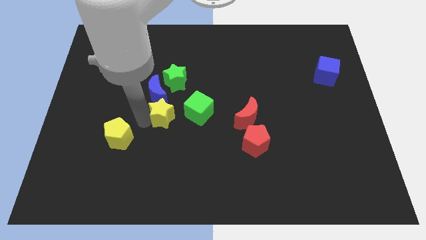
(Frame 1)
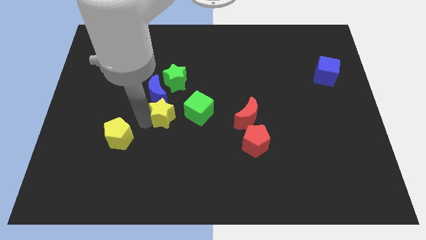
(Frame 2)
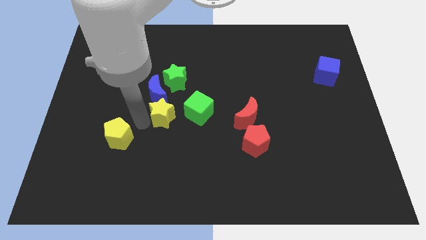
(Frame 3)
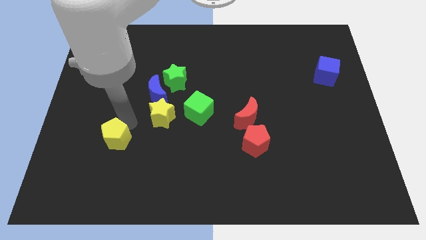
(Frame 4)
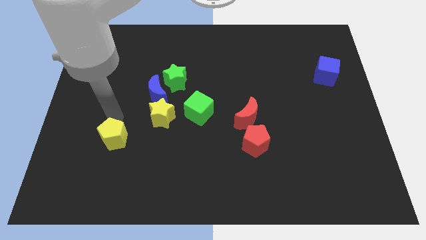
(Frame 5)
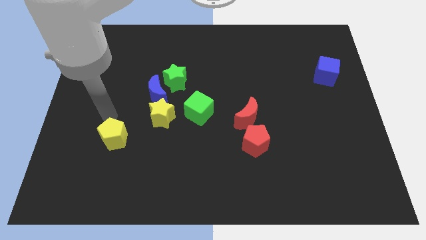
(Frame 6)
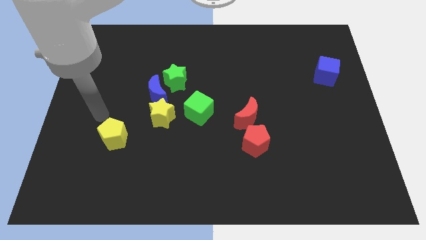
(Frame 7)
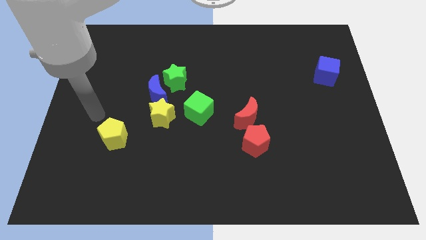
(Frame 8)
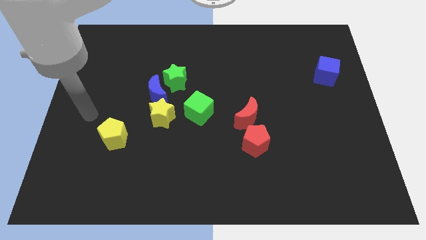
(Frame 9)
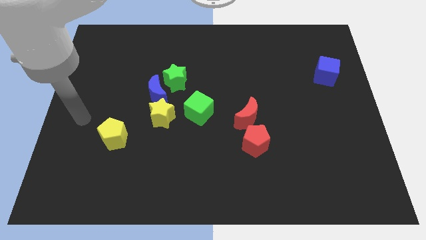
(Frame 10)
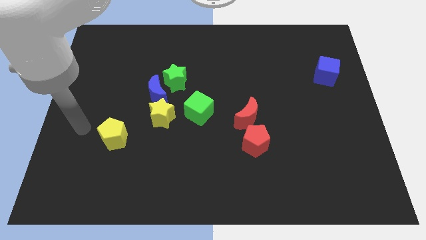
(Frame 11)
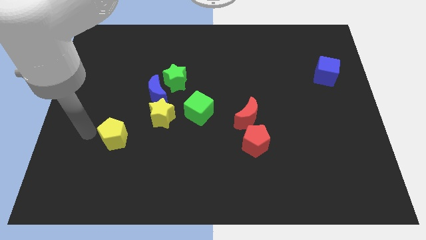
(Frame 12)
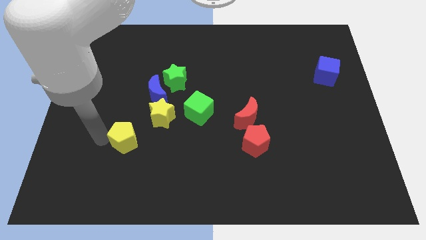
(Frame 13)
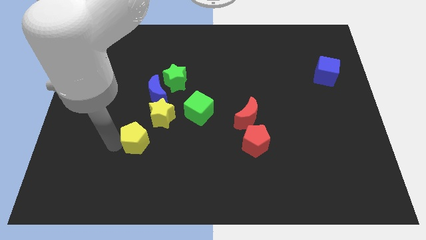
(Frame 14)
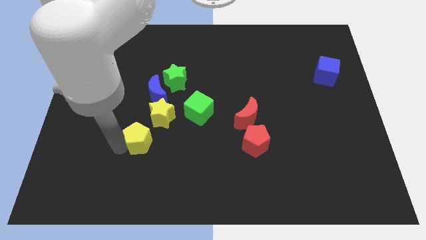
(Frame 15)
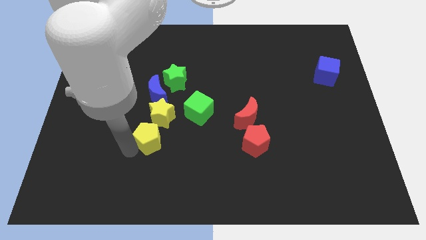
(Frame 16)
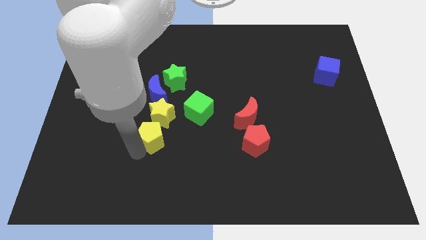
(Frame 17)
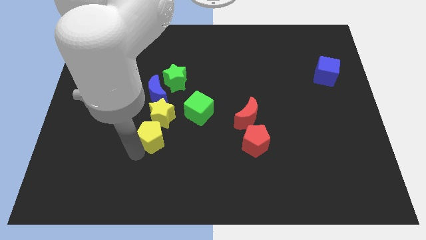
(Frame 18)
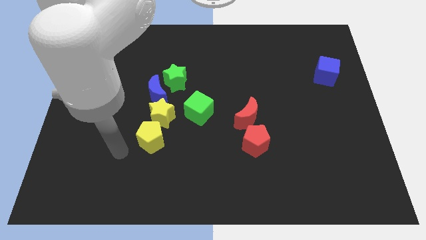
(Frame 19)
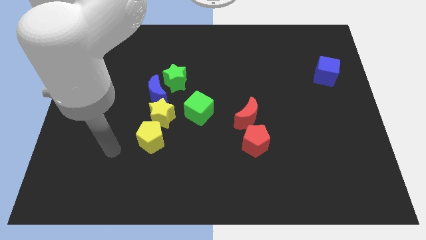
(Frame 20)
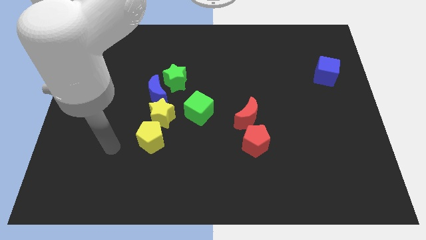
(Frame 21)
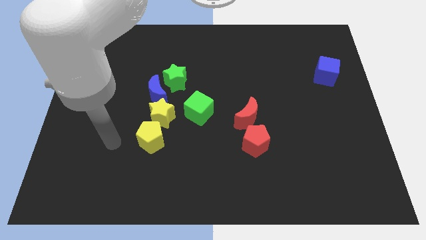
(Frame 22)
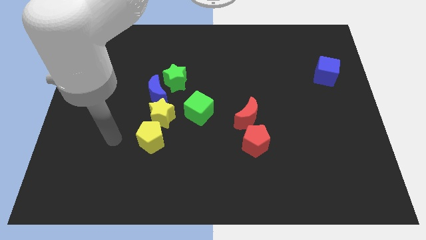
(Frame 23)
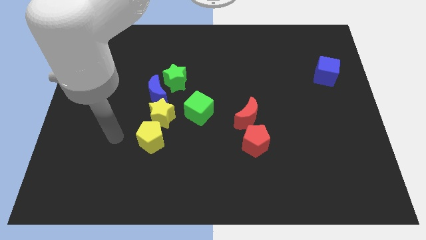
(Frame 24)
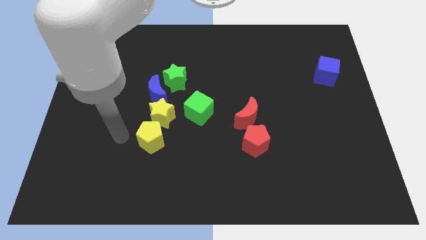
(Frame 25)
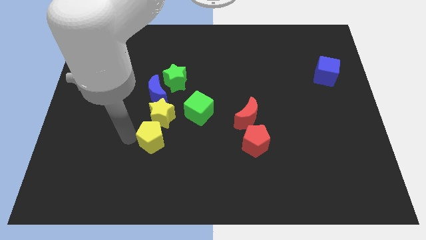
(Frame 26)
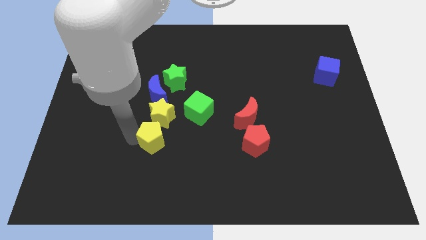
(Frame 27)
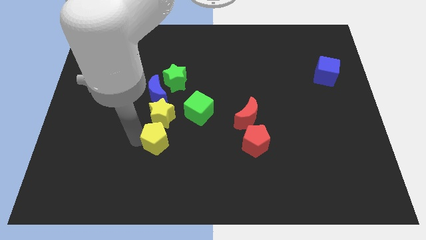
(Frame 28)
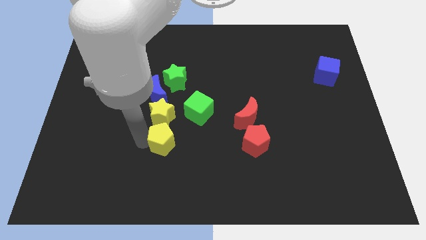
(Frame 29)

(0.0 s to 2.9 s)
move the yellow pentagon below the yellow star

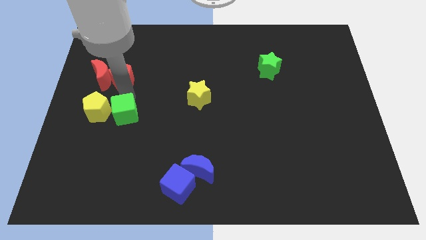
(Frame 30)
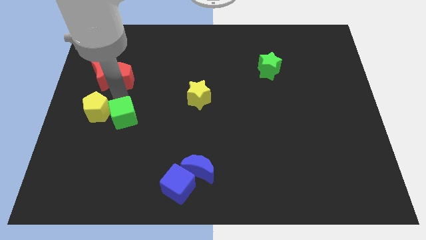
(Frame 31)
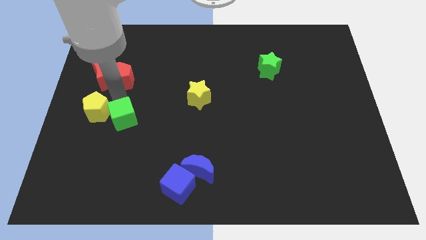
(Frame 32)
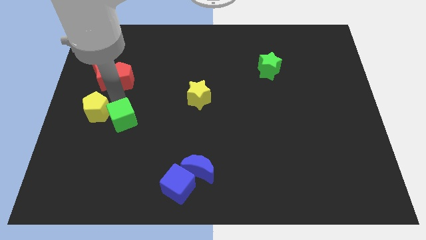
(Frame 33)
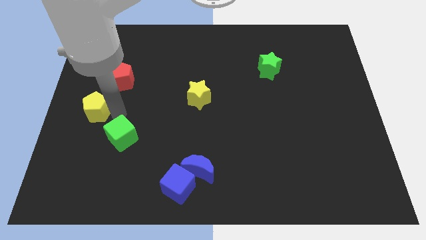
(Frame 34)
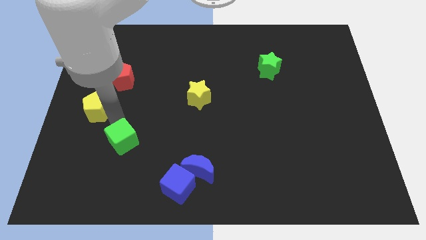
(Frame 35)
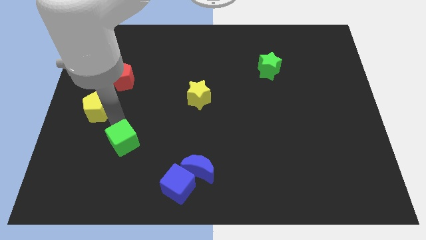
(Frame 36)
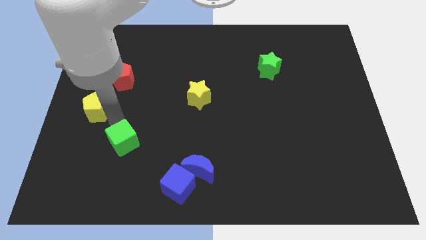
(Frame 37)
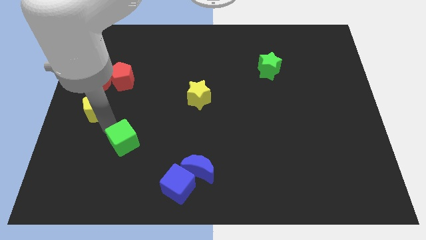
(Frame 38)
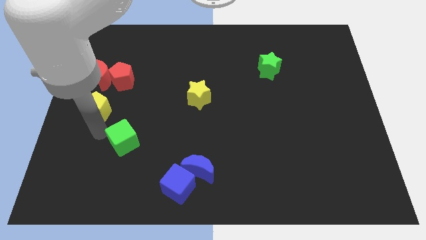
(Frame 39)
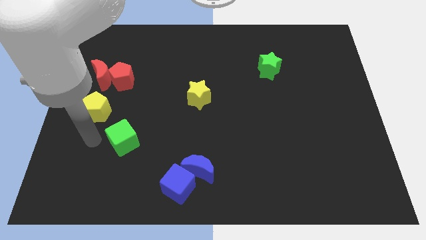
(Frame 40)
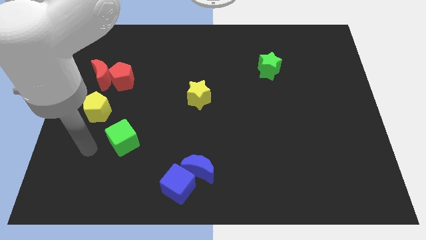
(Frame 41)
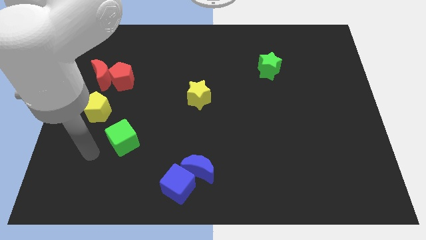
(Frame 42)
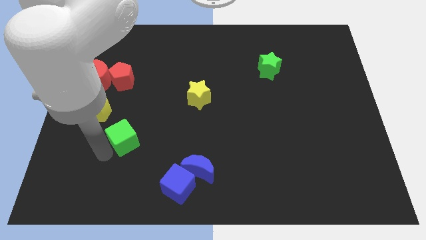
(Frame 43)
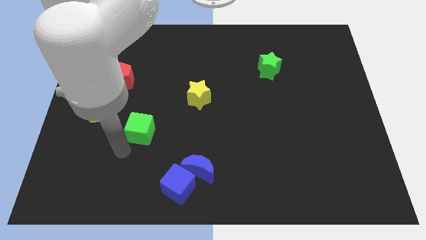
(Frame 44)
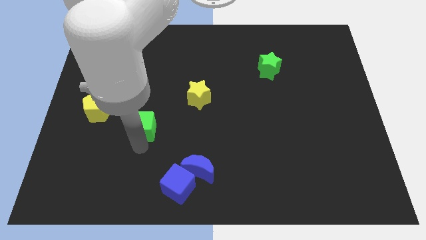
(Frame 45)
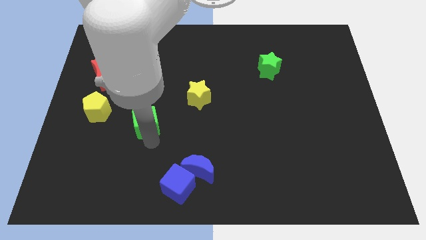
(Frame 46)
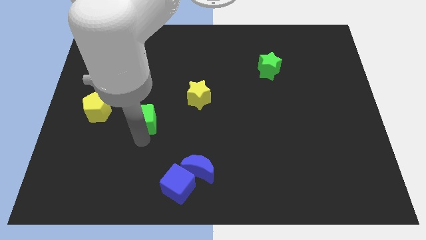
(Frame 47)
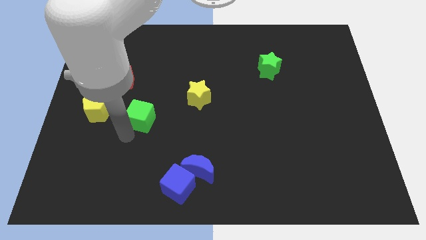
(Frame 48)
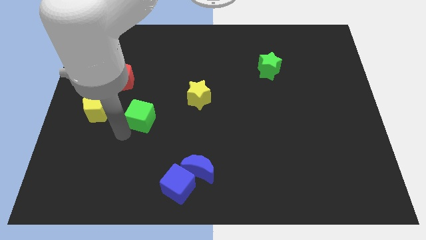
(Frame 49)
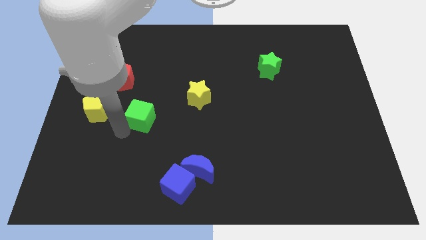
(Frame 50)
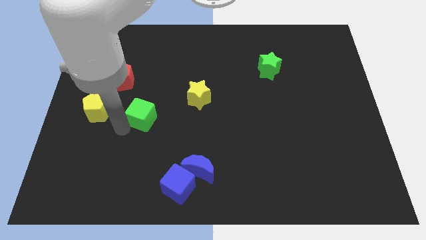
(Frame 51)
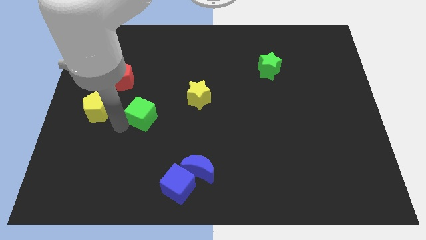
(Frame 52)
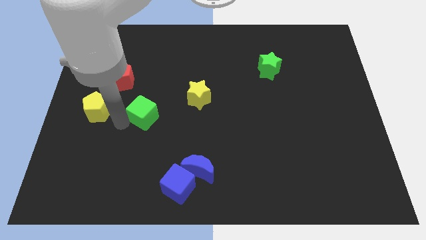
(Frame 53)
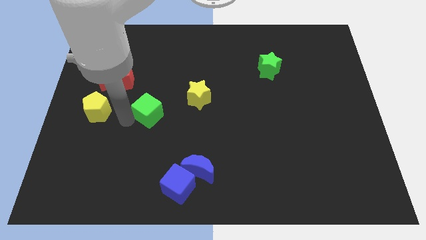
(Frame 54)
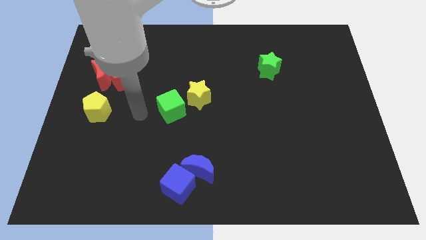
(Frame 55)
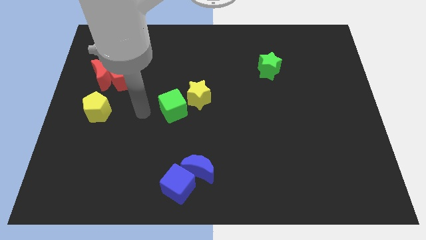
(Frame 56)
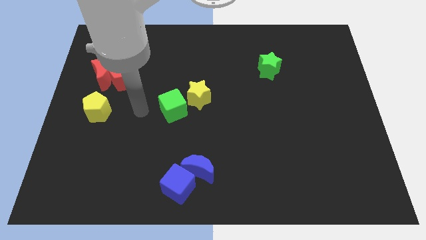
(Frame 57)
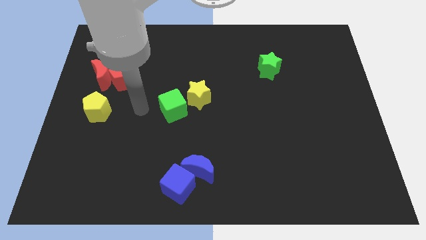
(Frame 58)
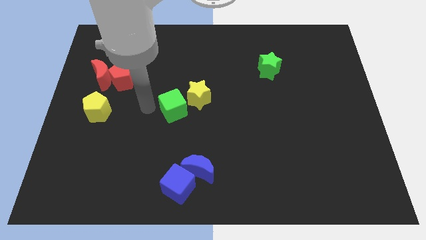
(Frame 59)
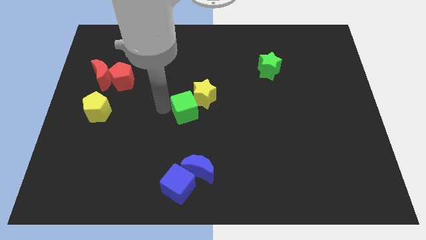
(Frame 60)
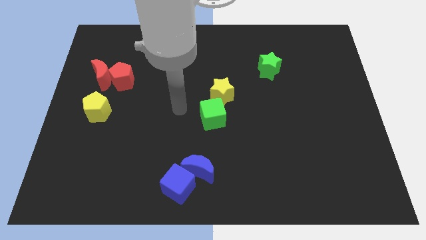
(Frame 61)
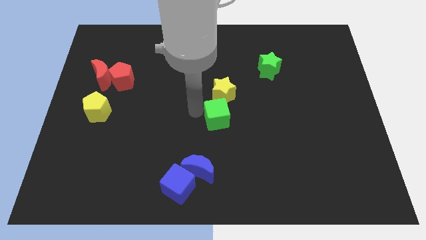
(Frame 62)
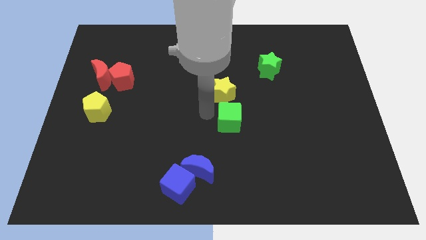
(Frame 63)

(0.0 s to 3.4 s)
place the green cube below the yellow star

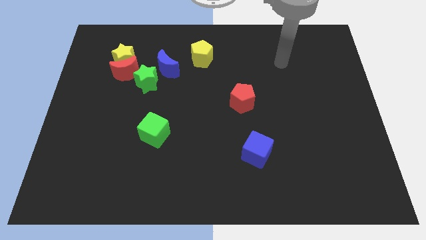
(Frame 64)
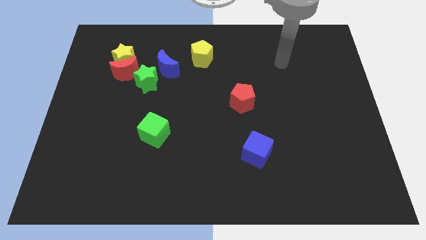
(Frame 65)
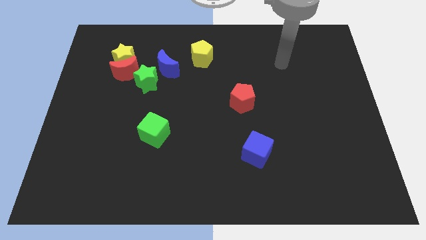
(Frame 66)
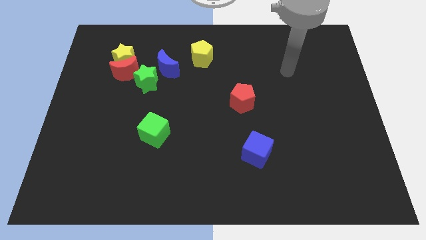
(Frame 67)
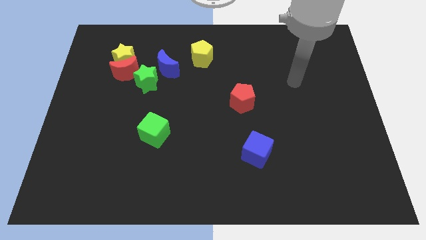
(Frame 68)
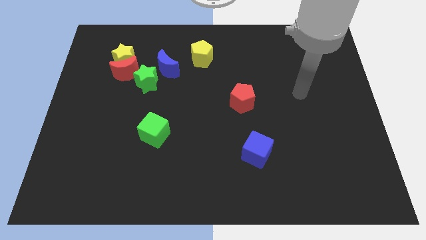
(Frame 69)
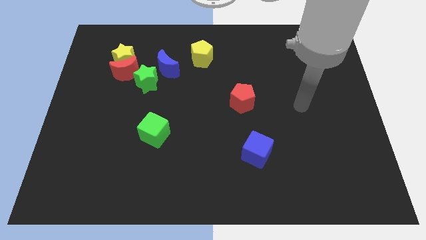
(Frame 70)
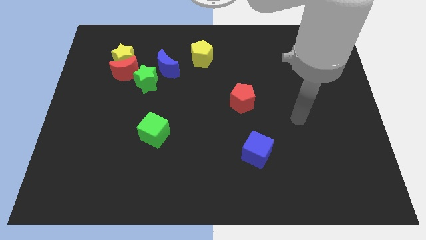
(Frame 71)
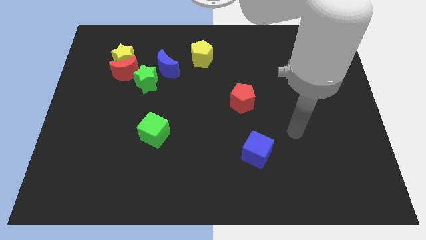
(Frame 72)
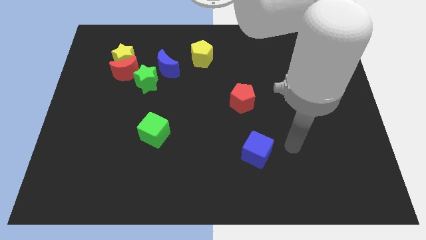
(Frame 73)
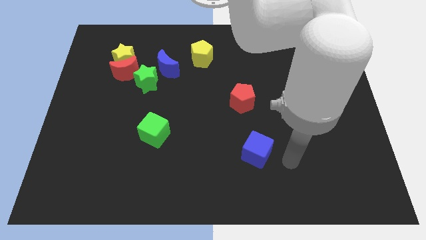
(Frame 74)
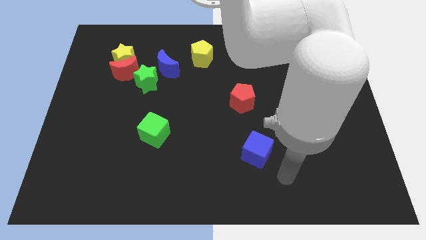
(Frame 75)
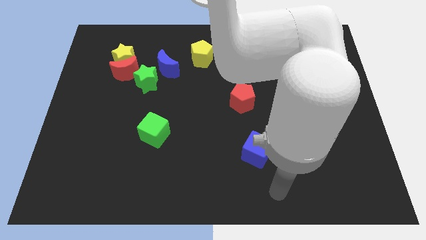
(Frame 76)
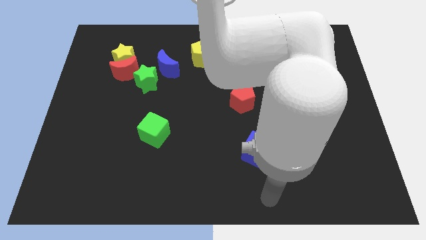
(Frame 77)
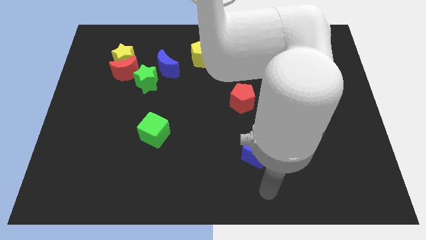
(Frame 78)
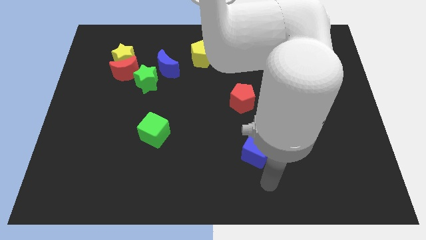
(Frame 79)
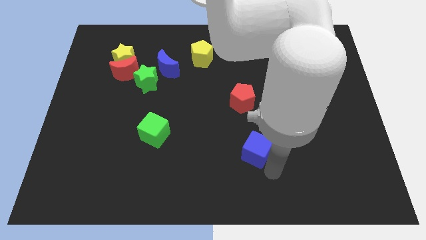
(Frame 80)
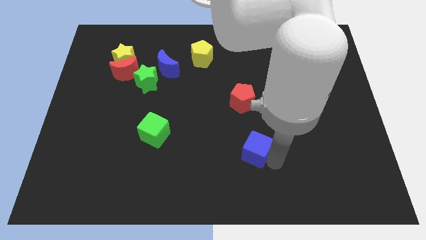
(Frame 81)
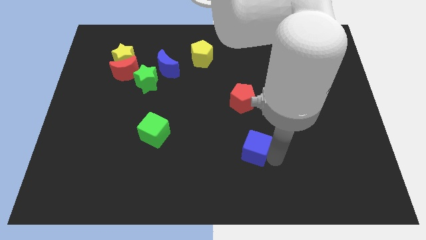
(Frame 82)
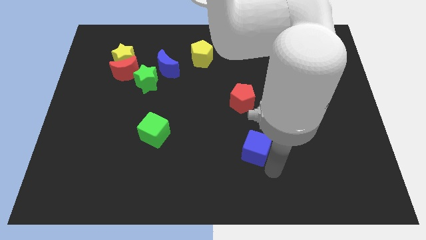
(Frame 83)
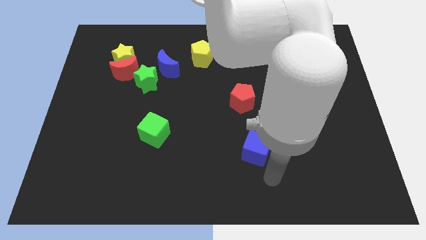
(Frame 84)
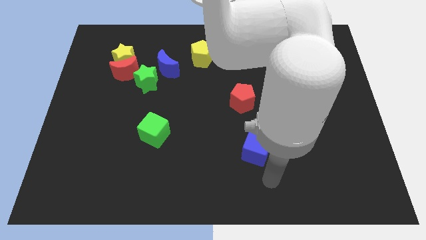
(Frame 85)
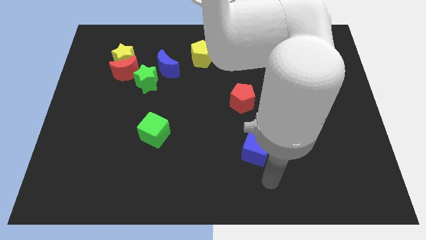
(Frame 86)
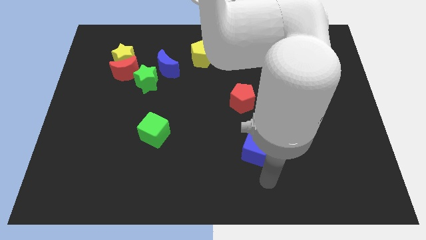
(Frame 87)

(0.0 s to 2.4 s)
move your arm towards to the blue cube

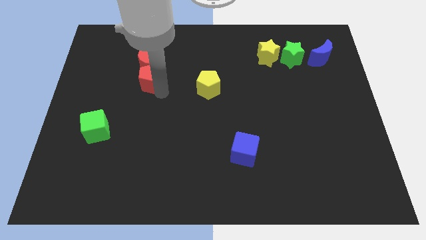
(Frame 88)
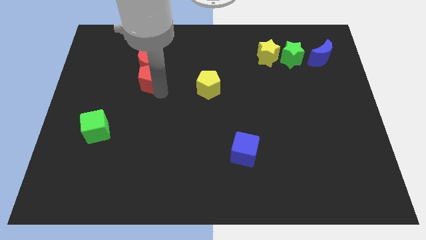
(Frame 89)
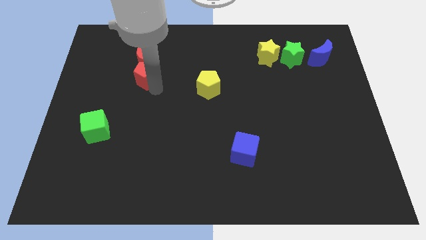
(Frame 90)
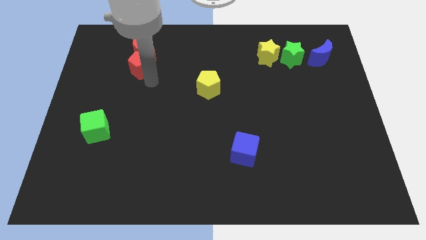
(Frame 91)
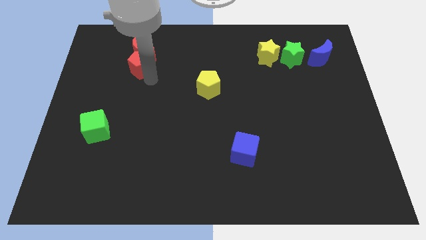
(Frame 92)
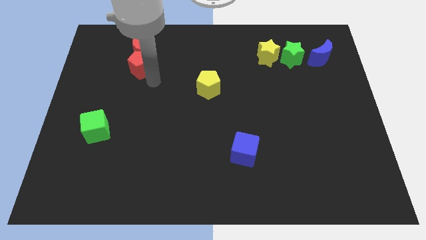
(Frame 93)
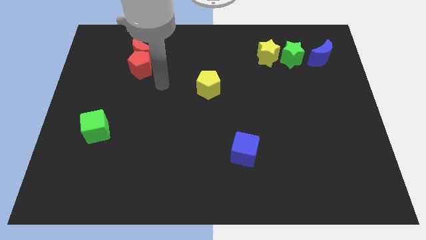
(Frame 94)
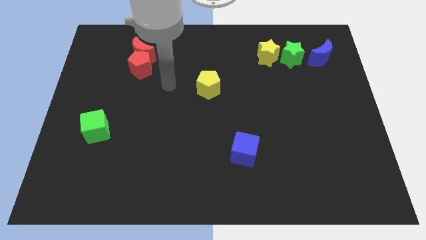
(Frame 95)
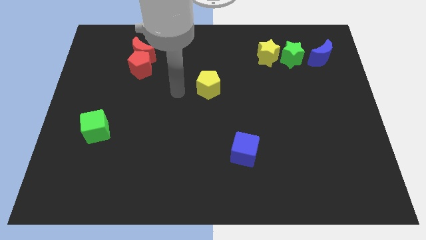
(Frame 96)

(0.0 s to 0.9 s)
push red pentagon into the red moon
